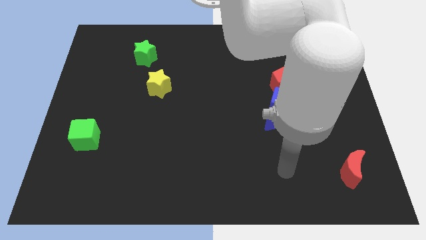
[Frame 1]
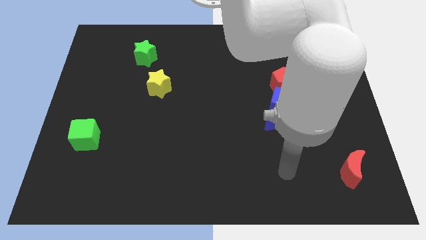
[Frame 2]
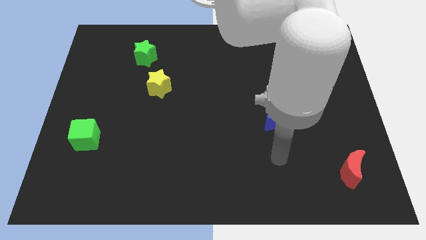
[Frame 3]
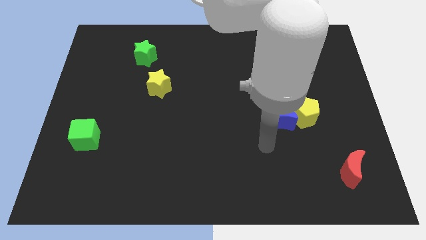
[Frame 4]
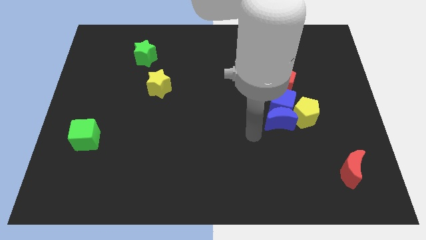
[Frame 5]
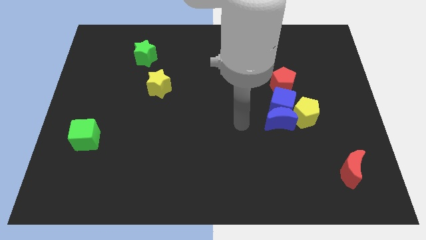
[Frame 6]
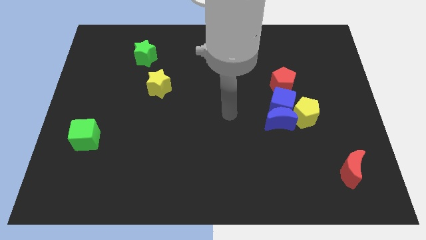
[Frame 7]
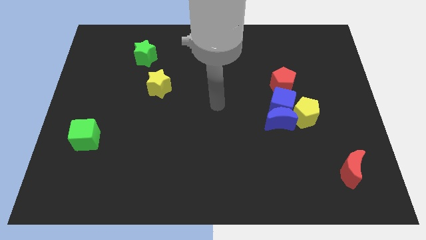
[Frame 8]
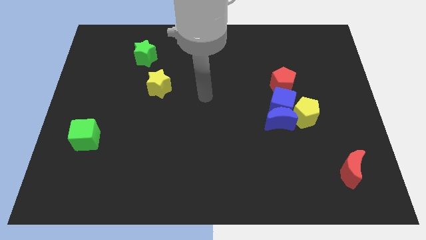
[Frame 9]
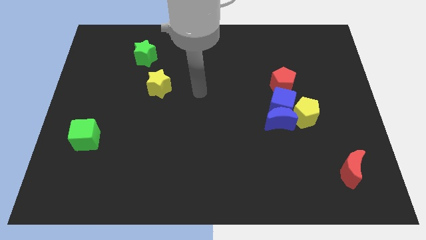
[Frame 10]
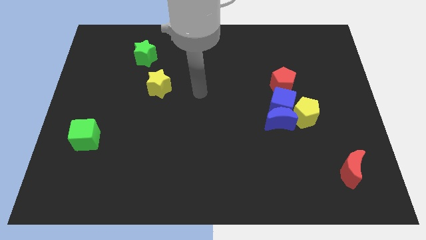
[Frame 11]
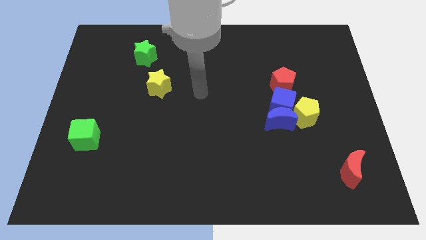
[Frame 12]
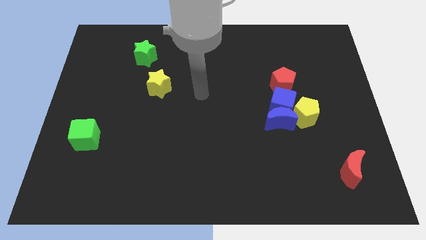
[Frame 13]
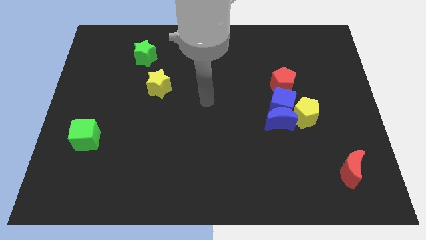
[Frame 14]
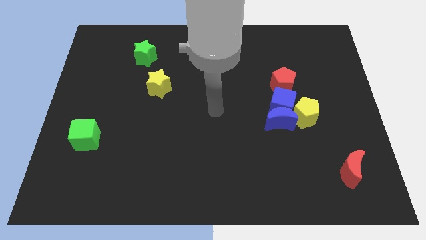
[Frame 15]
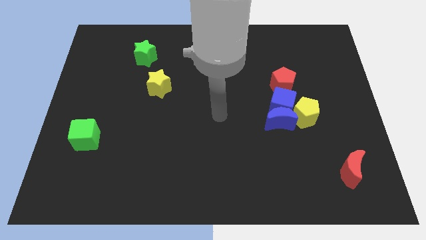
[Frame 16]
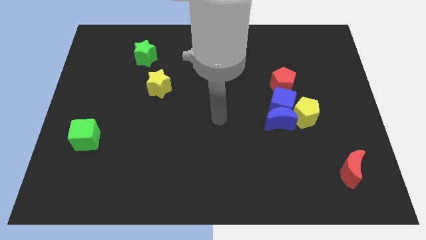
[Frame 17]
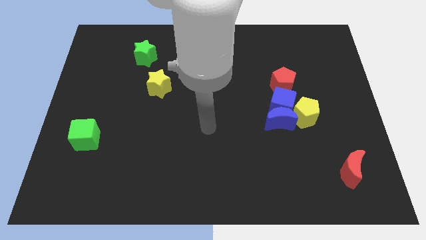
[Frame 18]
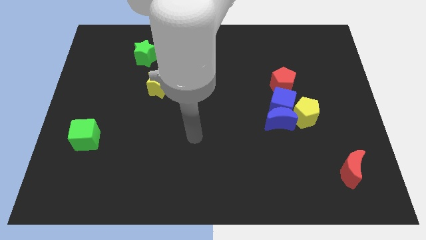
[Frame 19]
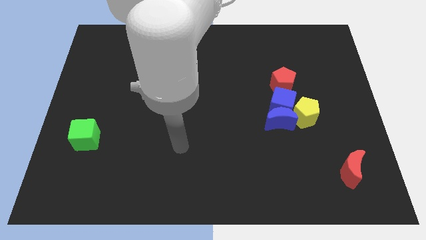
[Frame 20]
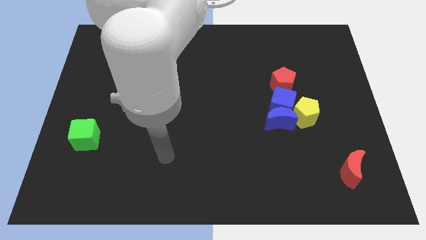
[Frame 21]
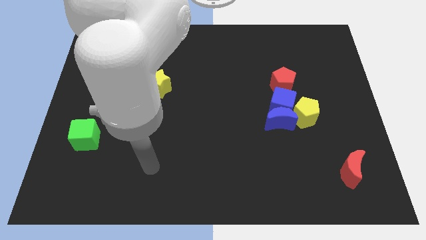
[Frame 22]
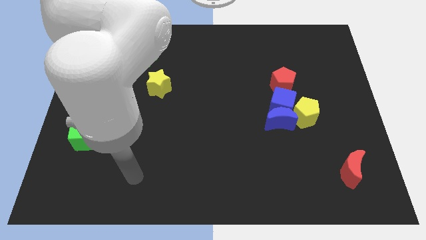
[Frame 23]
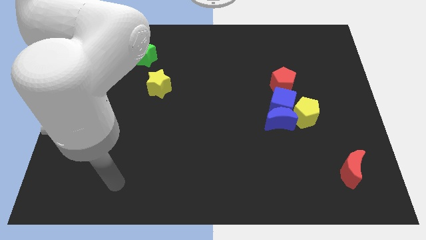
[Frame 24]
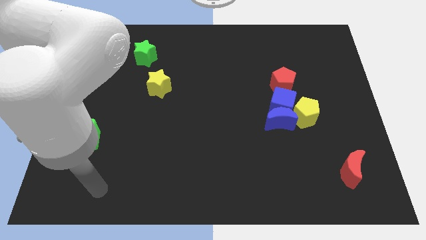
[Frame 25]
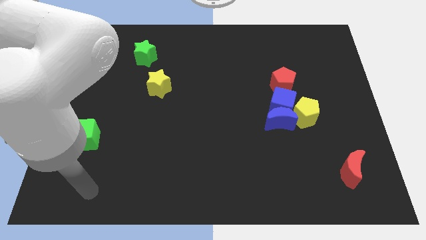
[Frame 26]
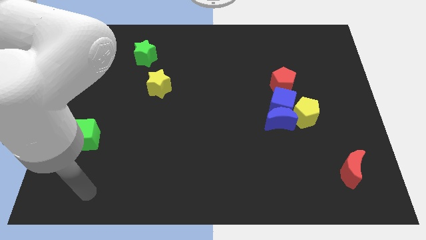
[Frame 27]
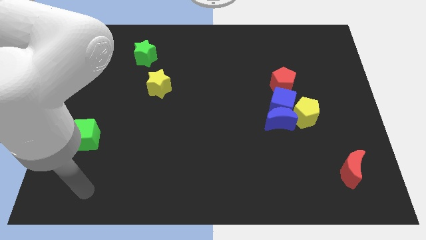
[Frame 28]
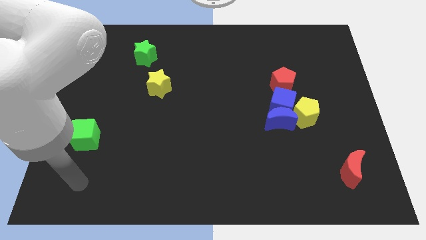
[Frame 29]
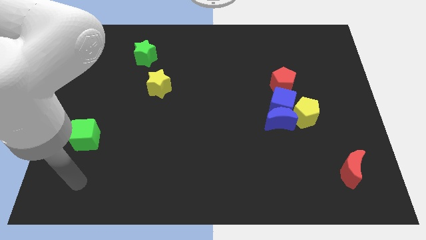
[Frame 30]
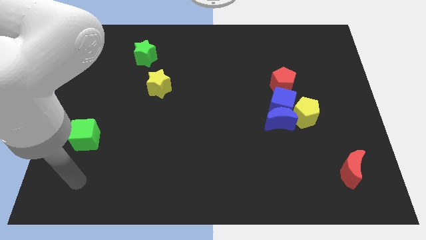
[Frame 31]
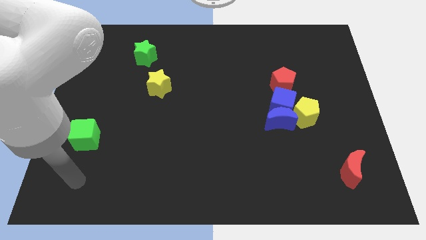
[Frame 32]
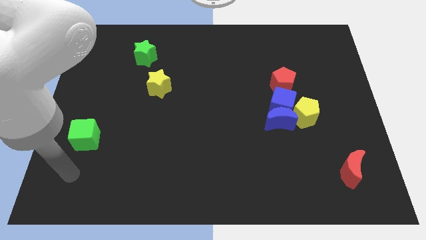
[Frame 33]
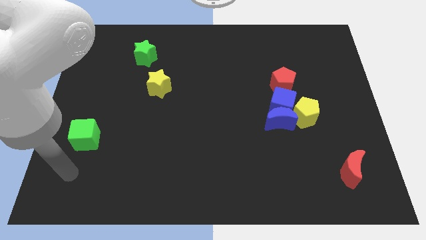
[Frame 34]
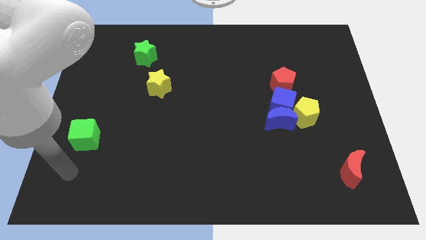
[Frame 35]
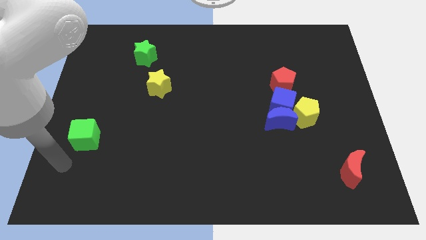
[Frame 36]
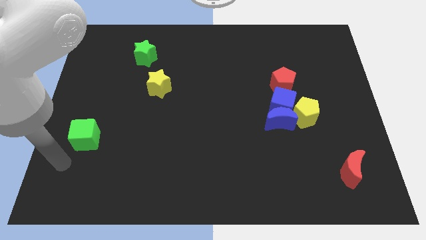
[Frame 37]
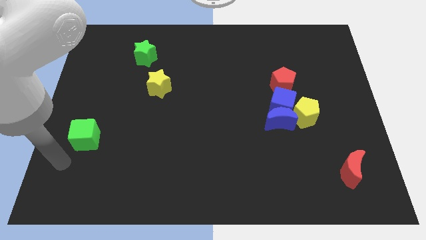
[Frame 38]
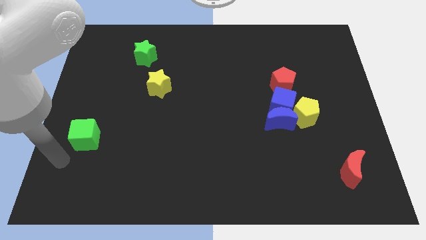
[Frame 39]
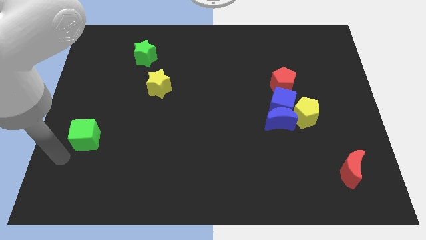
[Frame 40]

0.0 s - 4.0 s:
move the arm to the bottom left of the board

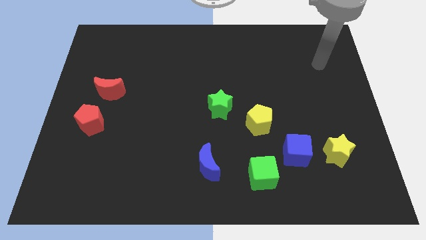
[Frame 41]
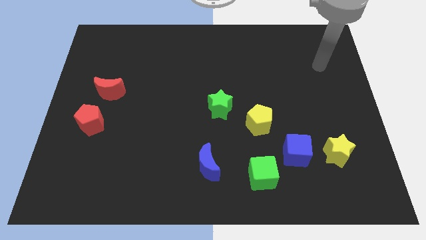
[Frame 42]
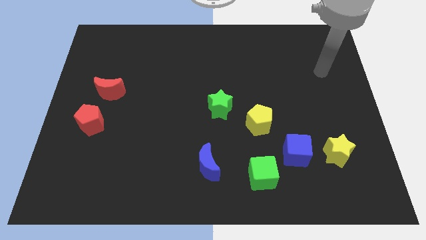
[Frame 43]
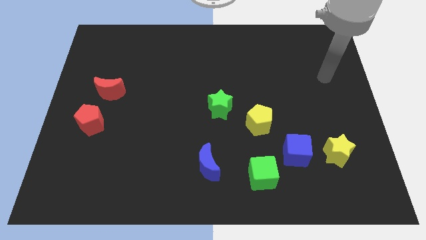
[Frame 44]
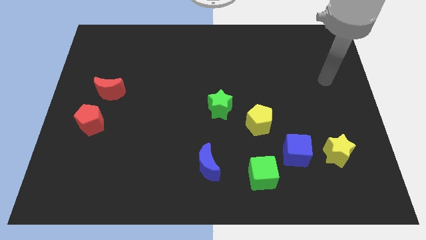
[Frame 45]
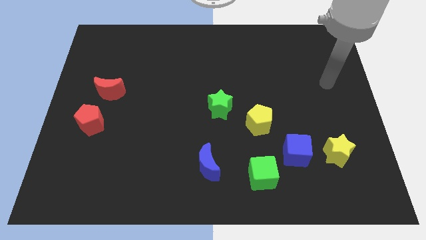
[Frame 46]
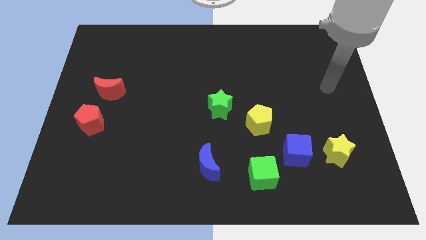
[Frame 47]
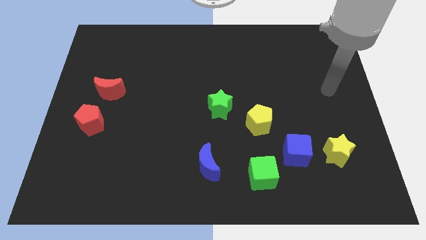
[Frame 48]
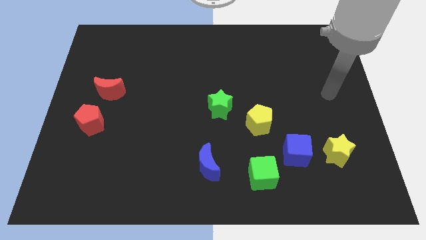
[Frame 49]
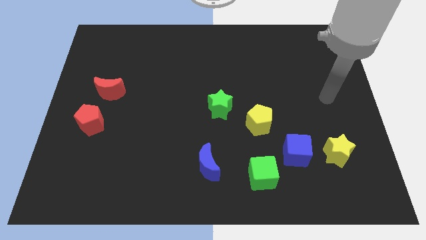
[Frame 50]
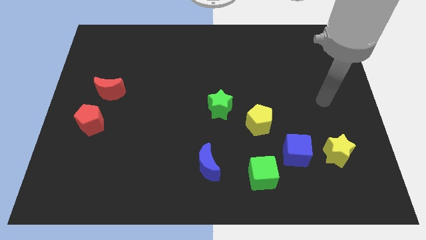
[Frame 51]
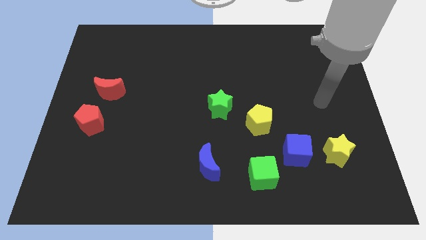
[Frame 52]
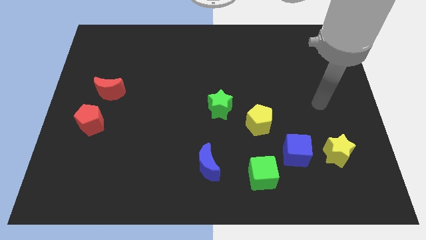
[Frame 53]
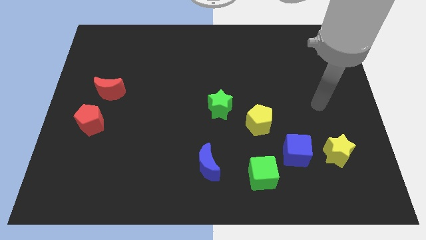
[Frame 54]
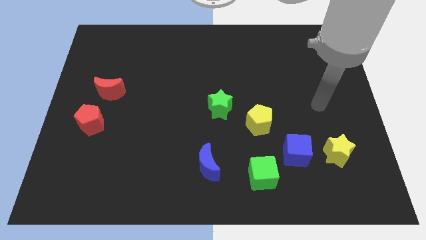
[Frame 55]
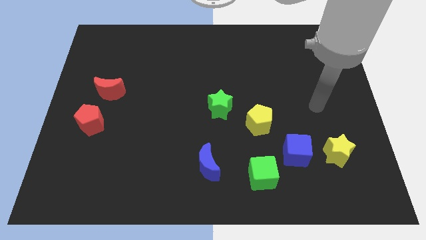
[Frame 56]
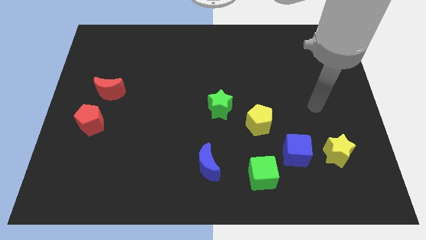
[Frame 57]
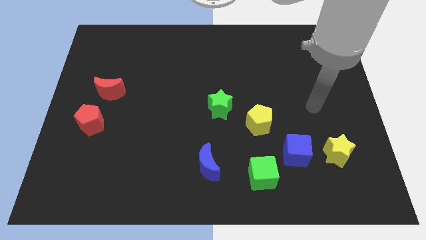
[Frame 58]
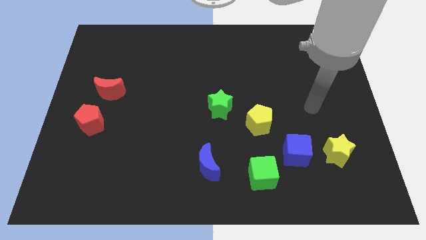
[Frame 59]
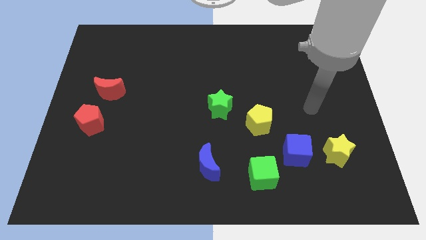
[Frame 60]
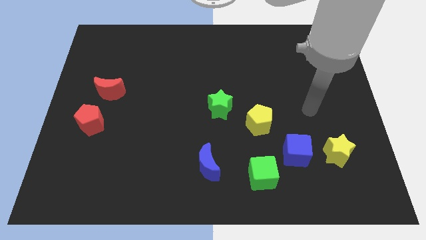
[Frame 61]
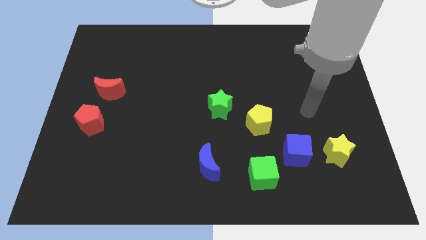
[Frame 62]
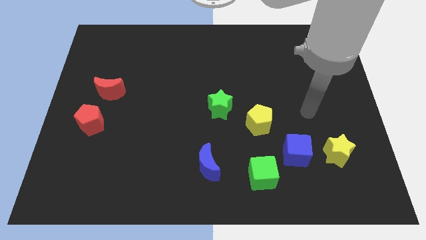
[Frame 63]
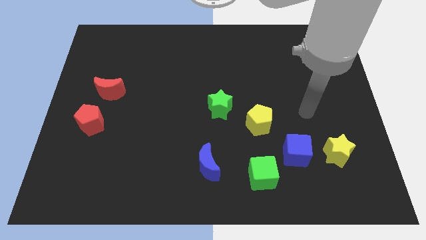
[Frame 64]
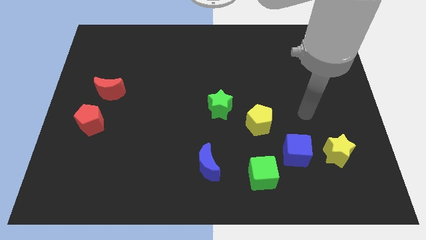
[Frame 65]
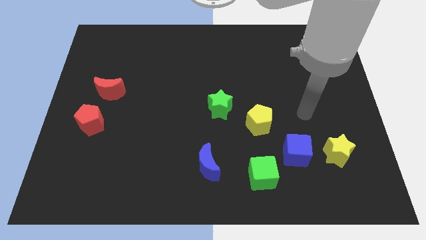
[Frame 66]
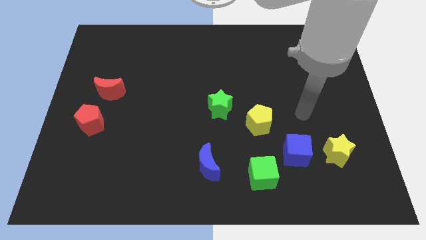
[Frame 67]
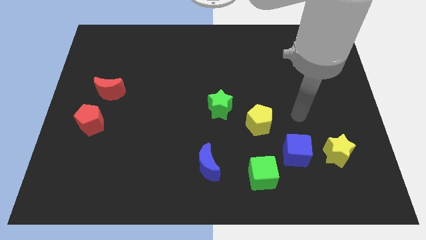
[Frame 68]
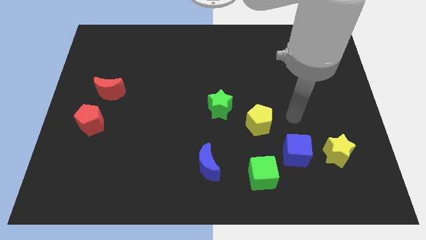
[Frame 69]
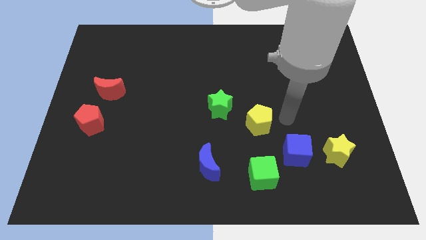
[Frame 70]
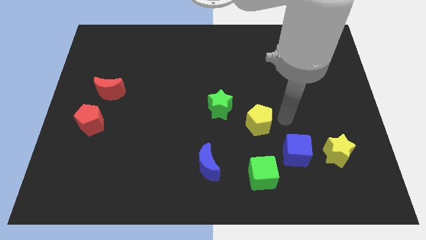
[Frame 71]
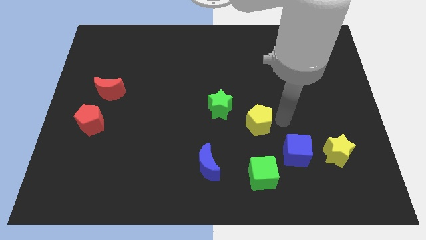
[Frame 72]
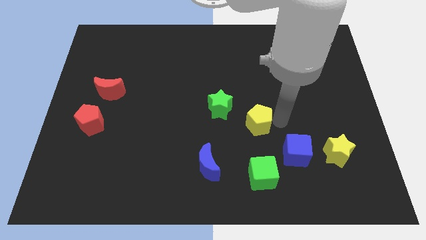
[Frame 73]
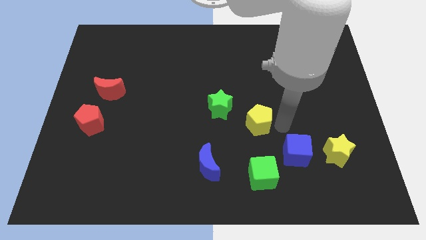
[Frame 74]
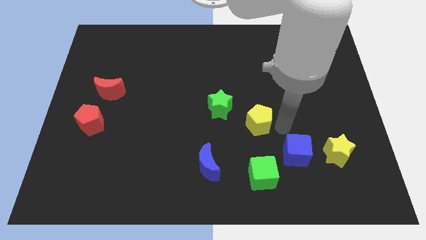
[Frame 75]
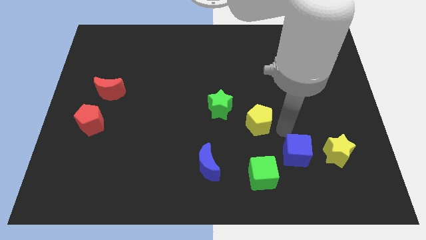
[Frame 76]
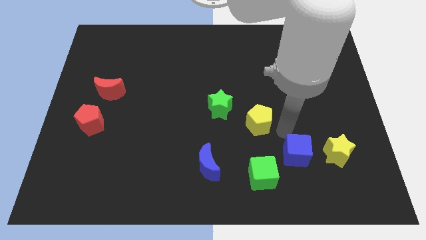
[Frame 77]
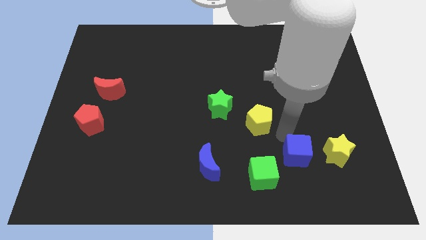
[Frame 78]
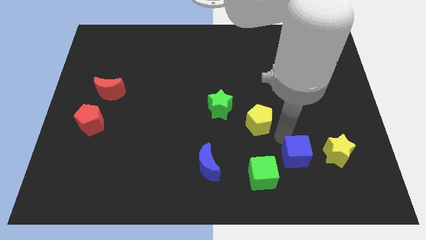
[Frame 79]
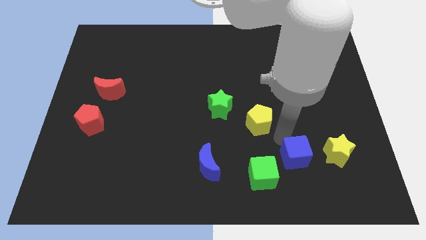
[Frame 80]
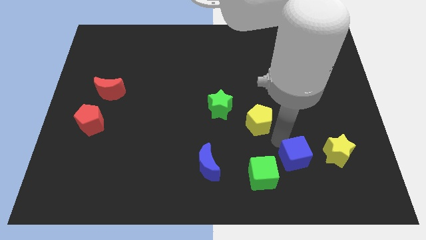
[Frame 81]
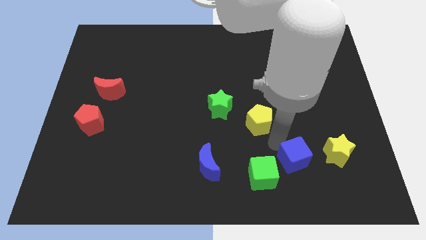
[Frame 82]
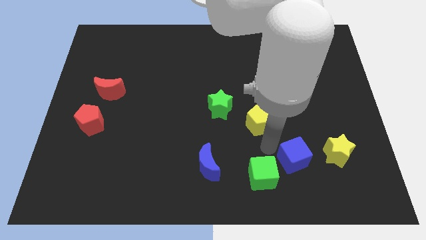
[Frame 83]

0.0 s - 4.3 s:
move the blue cube slightly towards right of the green cube

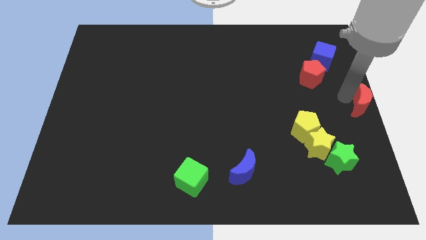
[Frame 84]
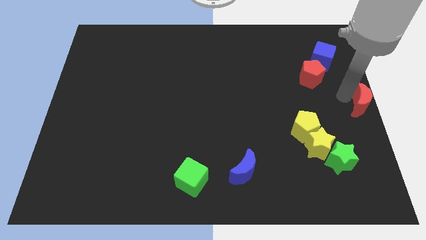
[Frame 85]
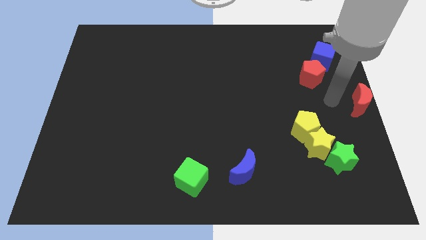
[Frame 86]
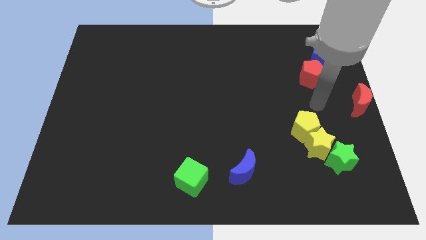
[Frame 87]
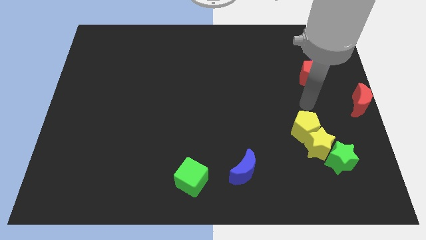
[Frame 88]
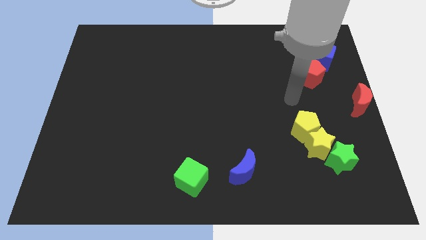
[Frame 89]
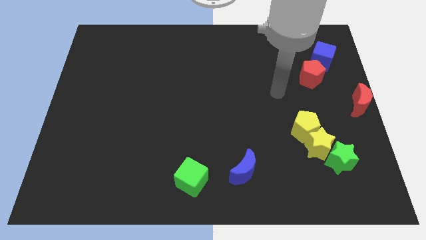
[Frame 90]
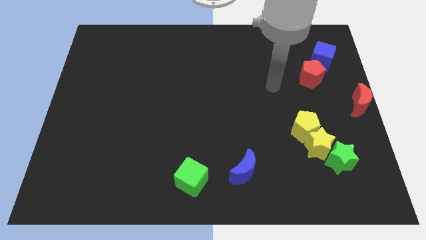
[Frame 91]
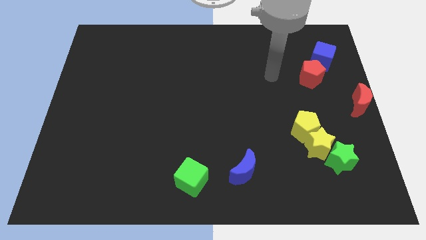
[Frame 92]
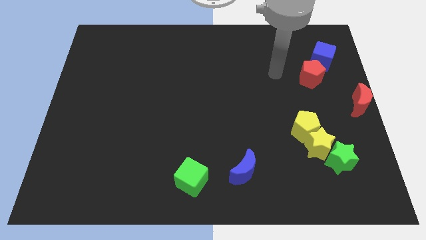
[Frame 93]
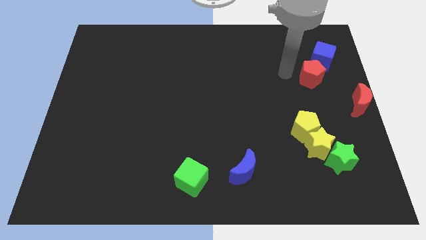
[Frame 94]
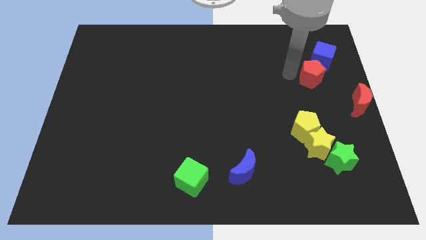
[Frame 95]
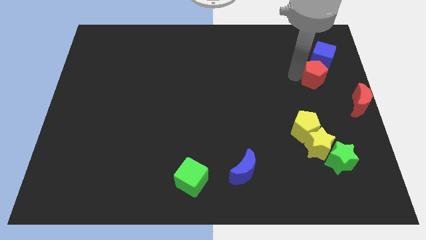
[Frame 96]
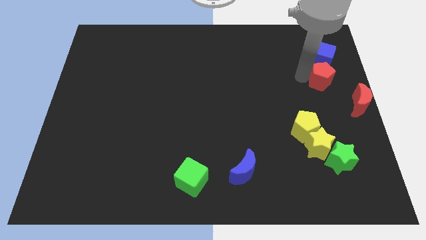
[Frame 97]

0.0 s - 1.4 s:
place the arm left to the red pentagon
